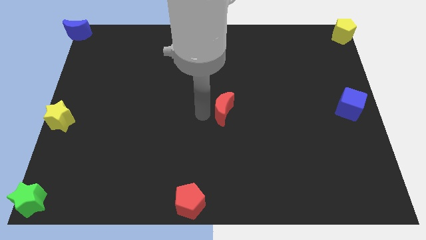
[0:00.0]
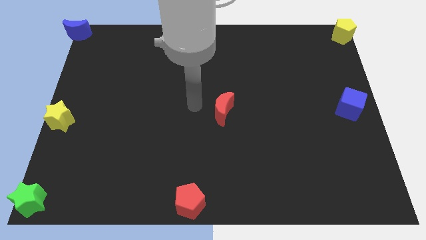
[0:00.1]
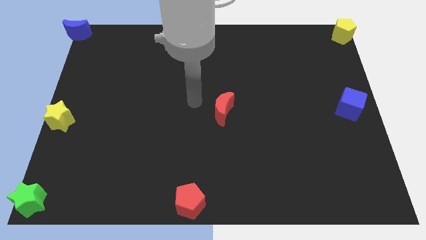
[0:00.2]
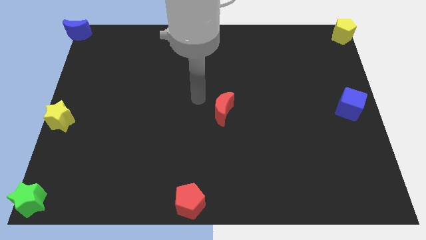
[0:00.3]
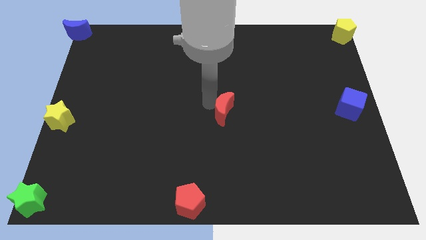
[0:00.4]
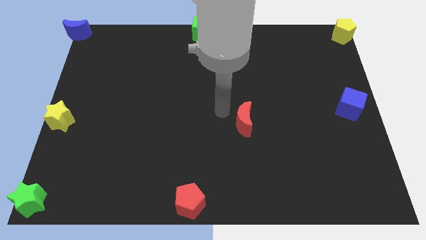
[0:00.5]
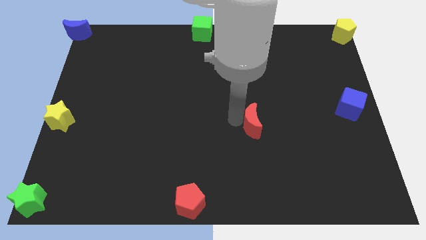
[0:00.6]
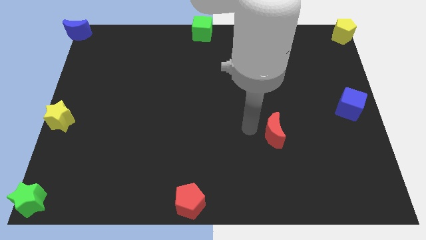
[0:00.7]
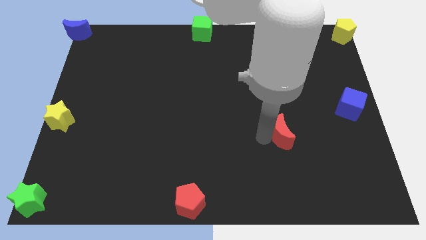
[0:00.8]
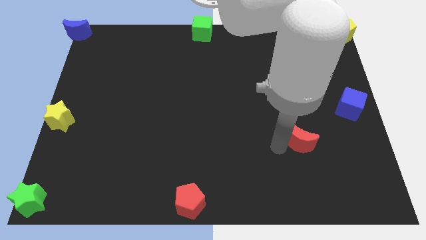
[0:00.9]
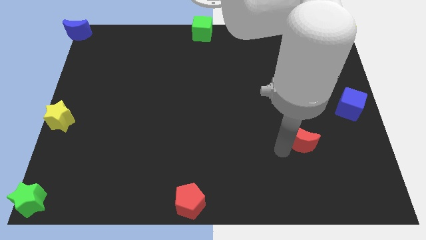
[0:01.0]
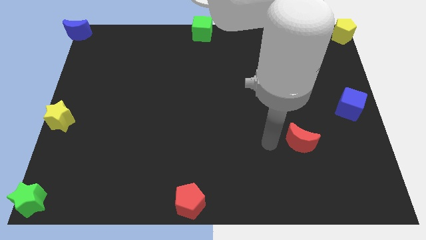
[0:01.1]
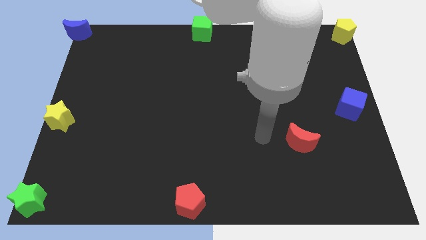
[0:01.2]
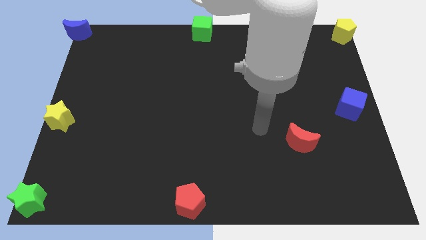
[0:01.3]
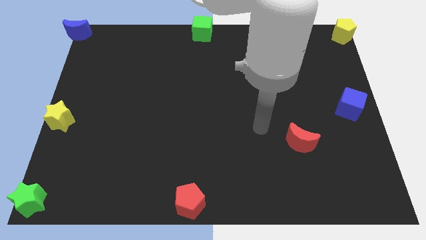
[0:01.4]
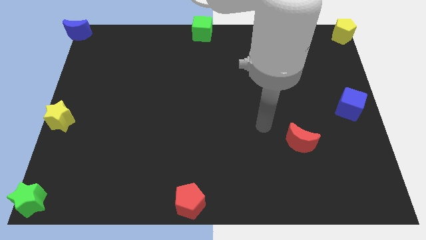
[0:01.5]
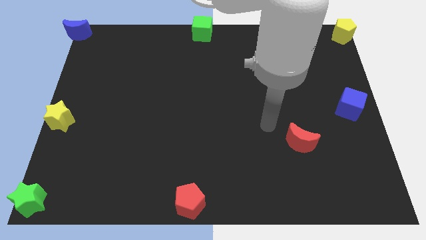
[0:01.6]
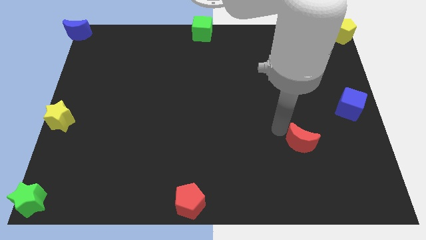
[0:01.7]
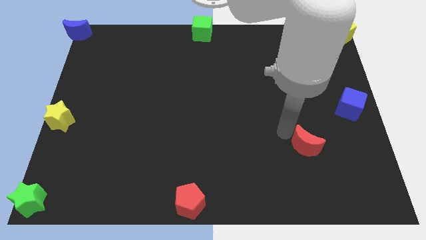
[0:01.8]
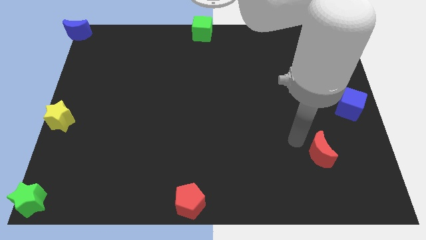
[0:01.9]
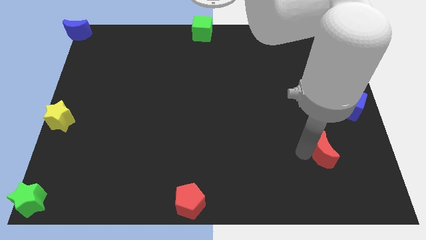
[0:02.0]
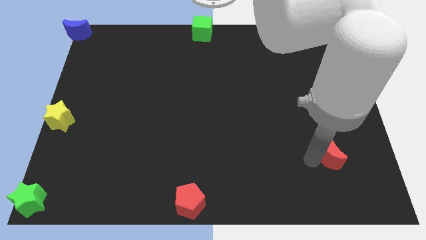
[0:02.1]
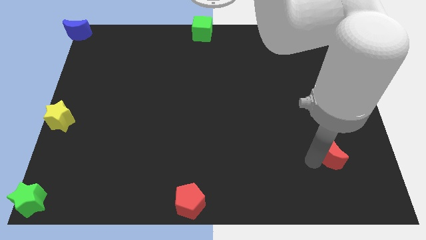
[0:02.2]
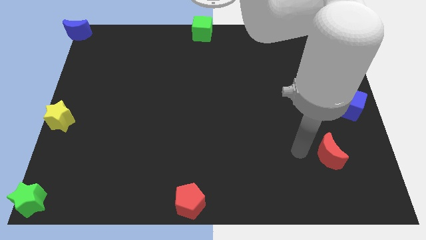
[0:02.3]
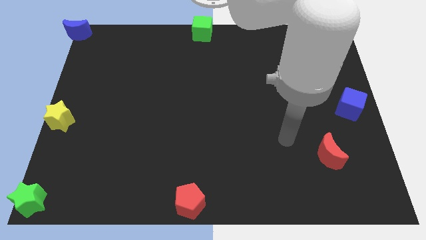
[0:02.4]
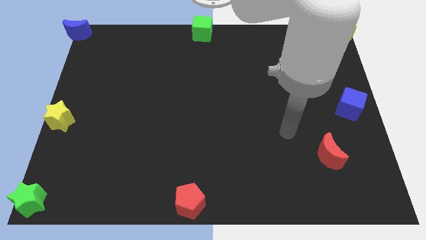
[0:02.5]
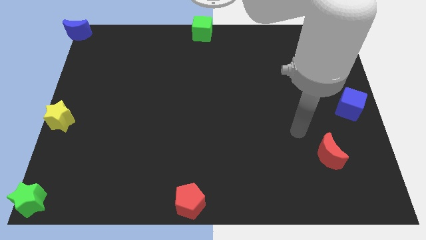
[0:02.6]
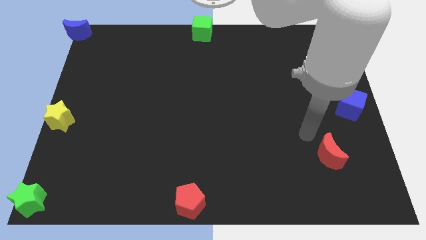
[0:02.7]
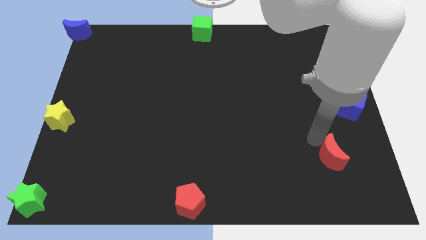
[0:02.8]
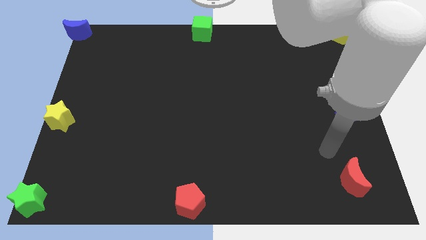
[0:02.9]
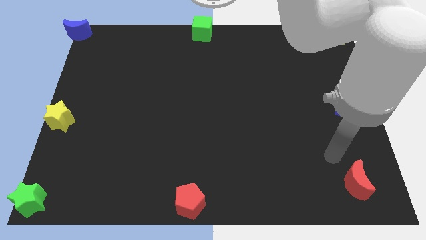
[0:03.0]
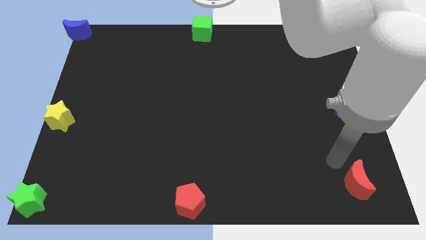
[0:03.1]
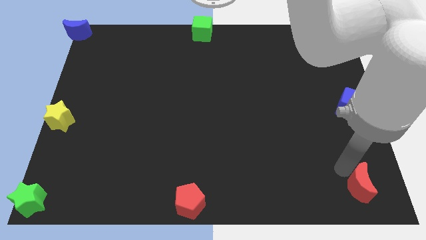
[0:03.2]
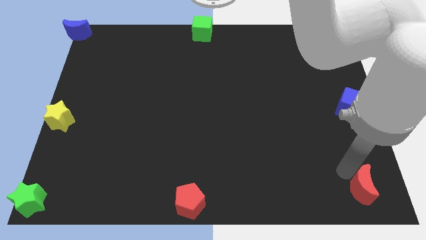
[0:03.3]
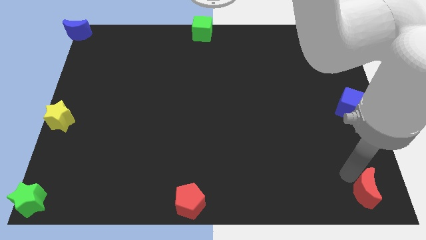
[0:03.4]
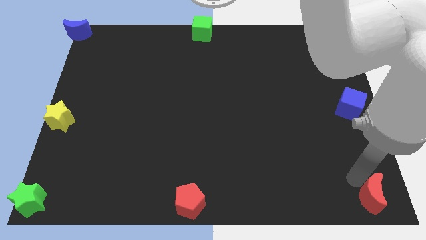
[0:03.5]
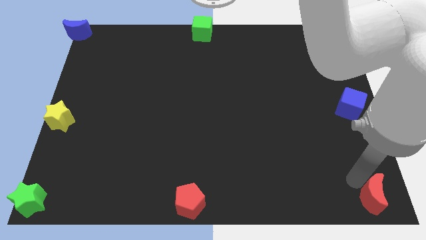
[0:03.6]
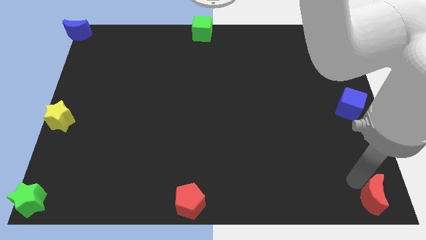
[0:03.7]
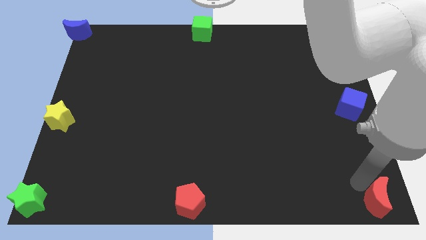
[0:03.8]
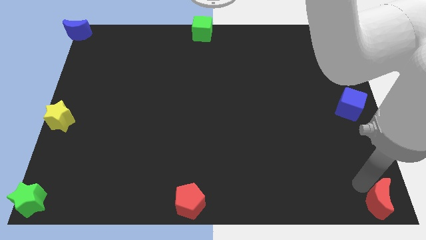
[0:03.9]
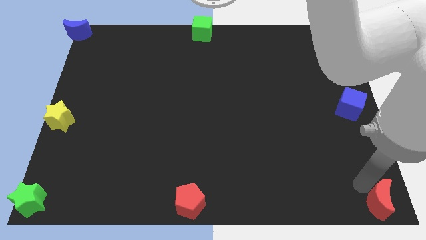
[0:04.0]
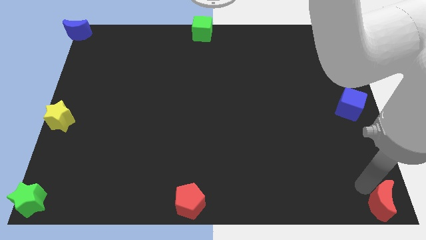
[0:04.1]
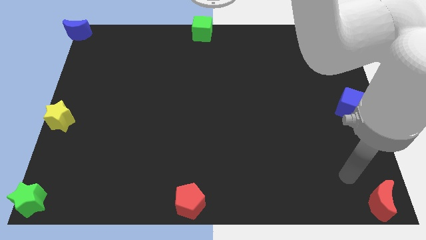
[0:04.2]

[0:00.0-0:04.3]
push the red crescent to the bottom right to the board

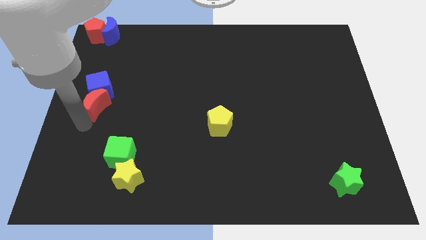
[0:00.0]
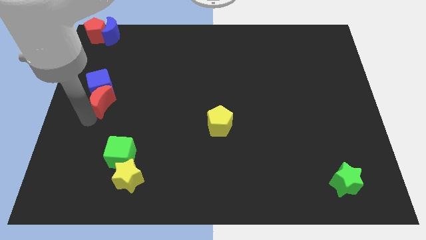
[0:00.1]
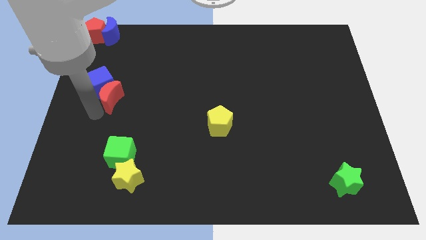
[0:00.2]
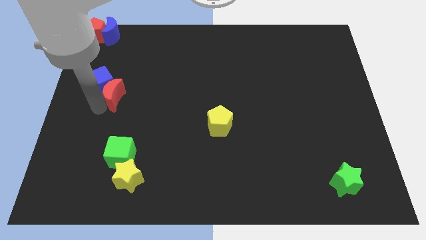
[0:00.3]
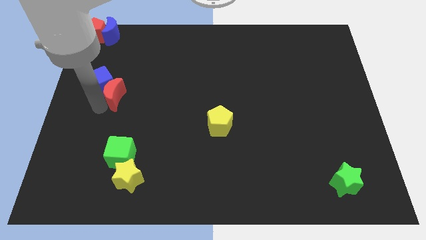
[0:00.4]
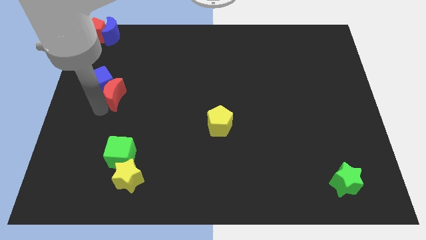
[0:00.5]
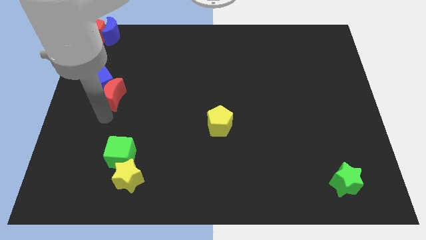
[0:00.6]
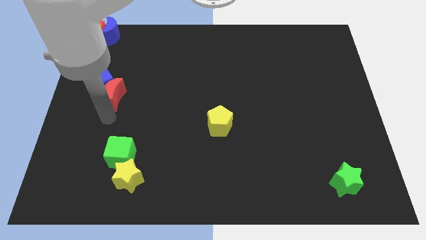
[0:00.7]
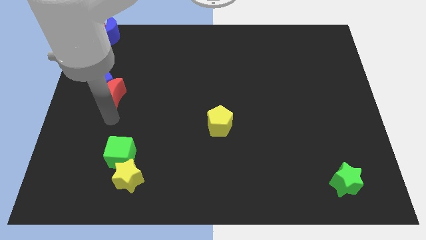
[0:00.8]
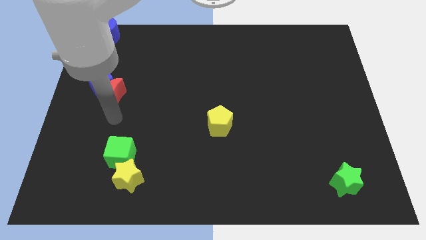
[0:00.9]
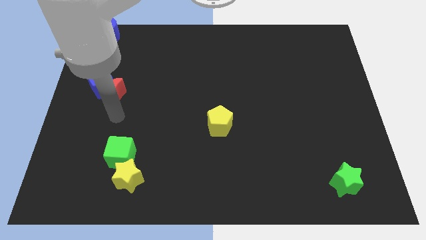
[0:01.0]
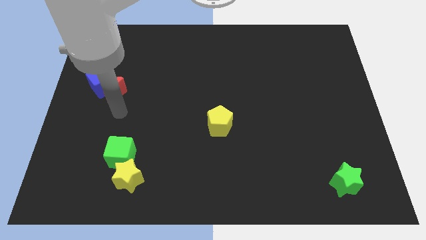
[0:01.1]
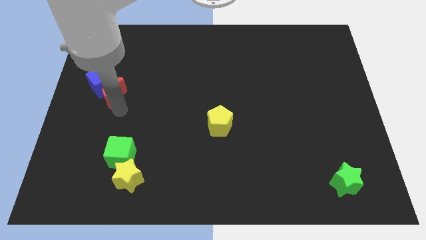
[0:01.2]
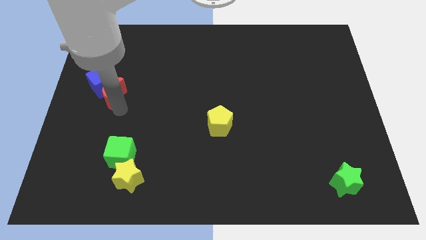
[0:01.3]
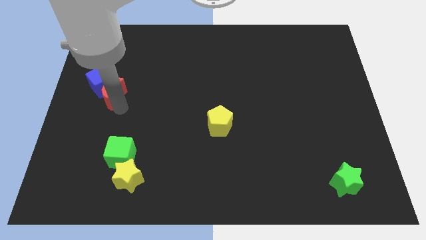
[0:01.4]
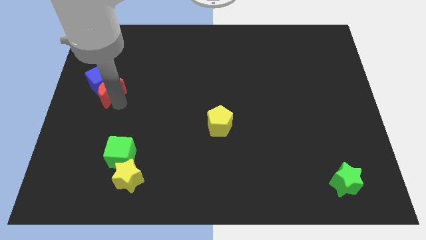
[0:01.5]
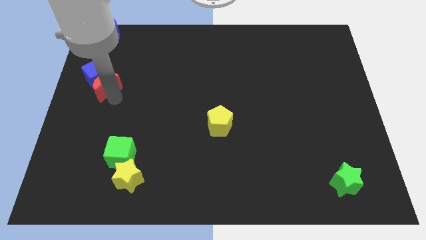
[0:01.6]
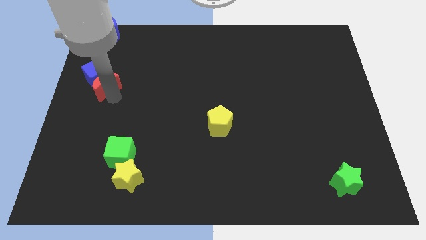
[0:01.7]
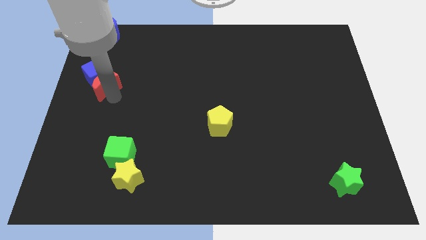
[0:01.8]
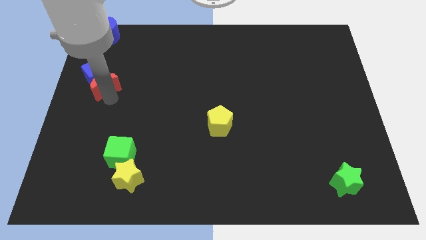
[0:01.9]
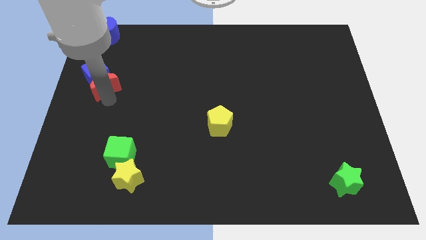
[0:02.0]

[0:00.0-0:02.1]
push the red moon upwards

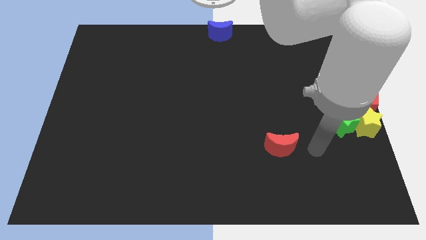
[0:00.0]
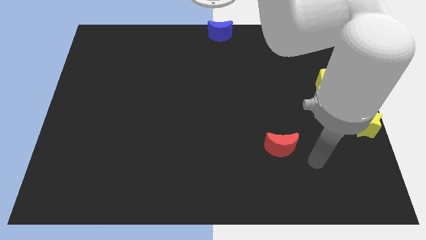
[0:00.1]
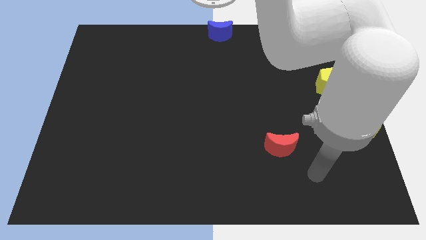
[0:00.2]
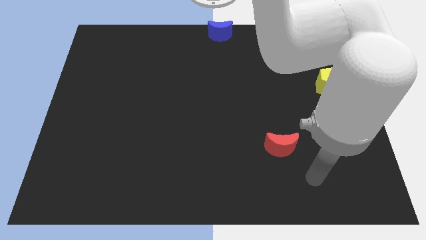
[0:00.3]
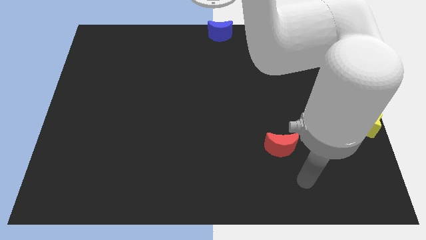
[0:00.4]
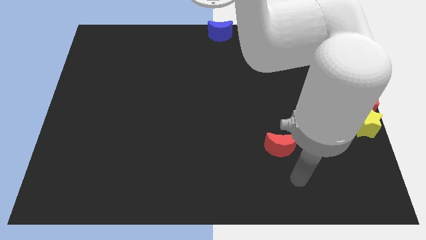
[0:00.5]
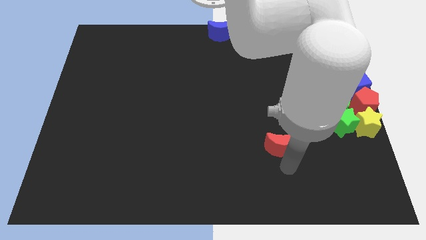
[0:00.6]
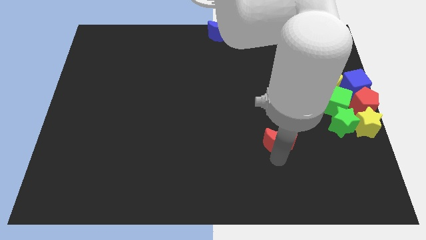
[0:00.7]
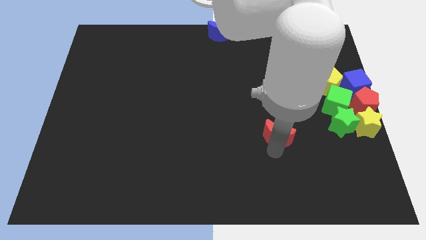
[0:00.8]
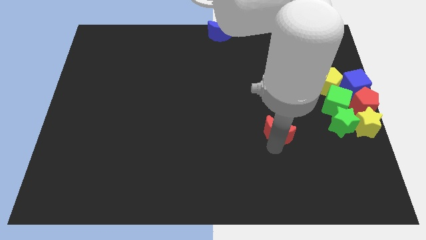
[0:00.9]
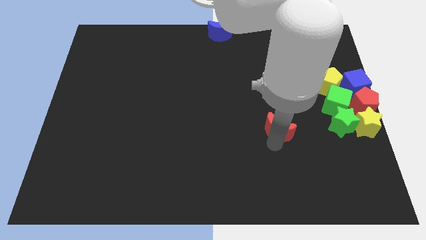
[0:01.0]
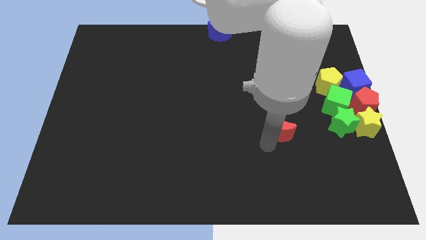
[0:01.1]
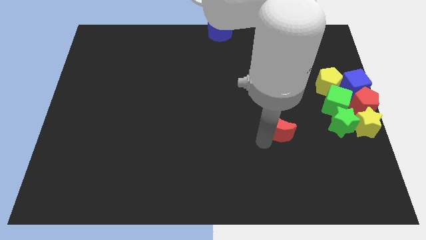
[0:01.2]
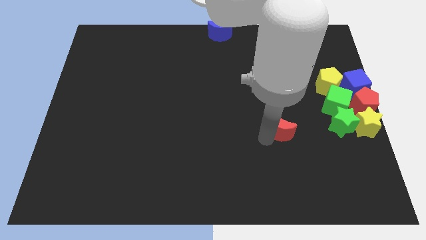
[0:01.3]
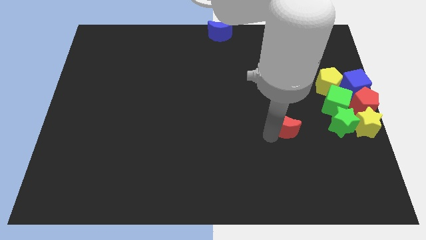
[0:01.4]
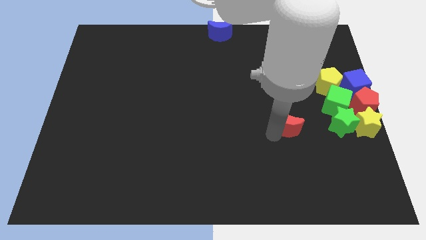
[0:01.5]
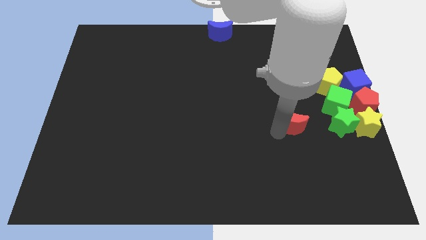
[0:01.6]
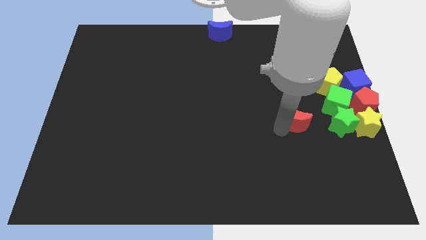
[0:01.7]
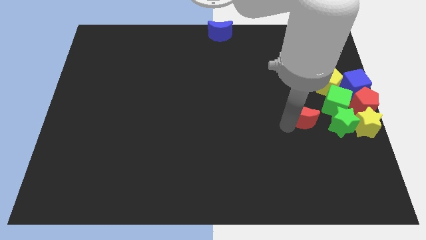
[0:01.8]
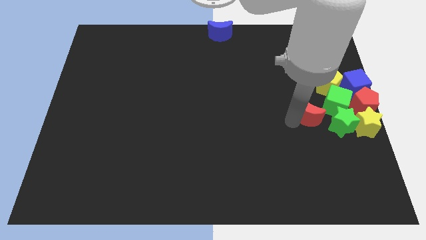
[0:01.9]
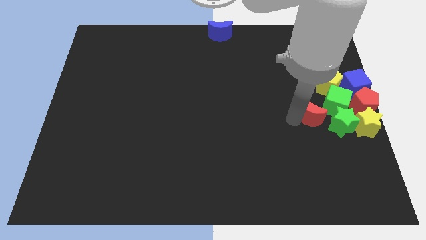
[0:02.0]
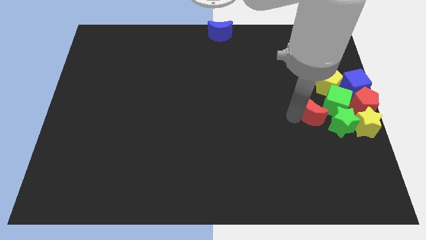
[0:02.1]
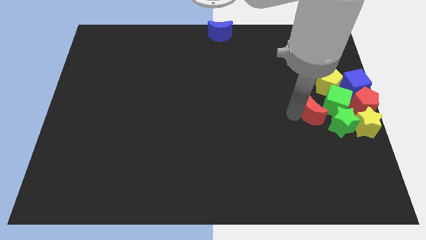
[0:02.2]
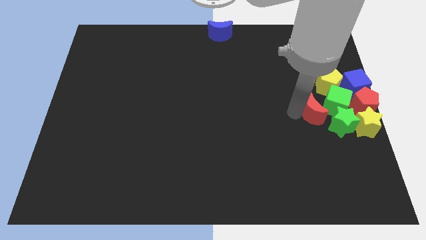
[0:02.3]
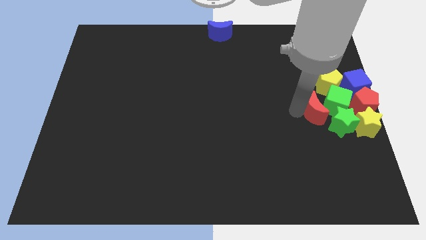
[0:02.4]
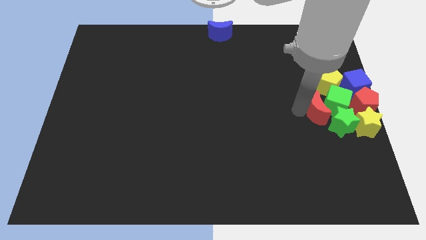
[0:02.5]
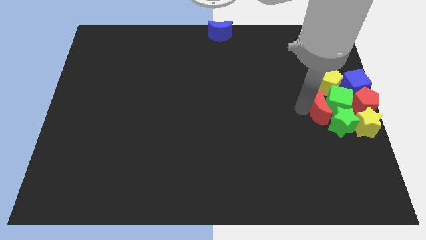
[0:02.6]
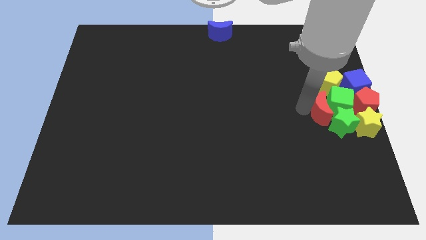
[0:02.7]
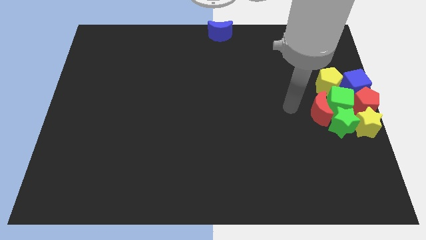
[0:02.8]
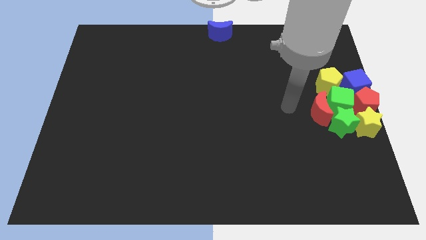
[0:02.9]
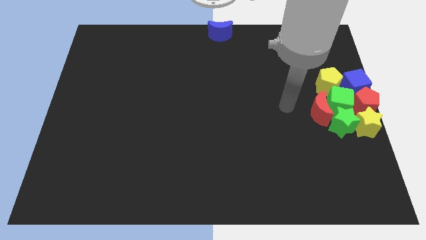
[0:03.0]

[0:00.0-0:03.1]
move red pentagon into green cube
